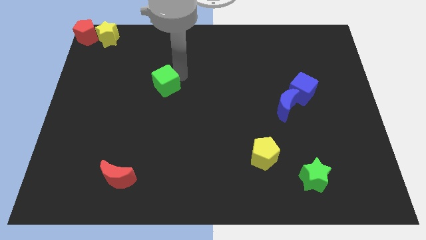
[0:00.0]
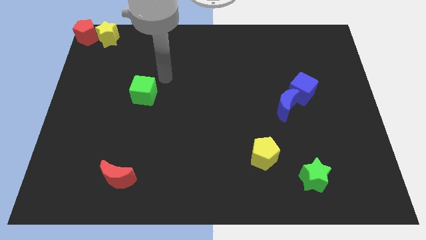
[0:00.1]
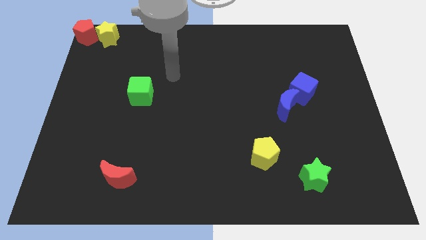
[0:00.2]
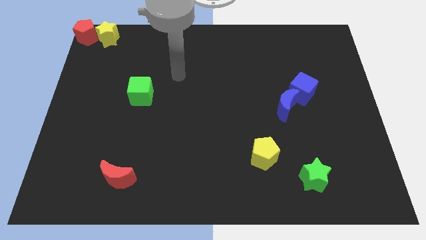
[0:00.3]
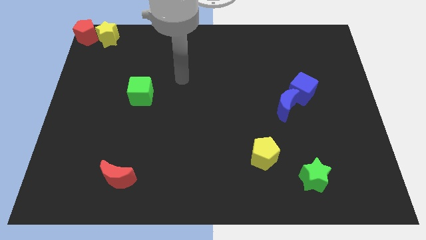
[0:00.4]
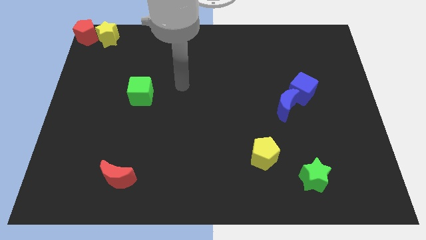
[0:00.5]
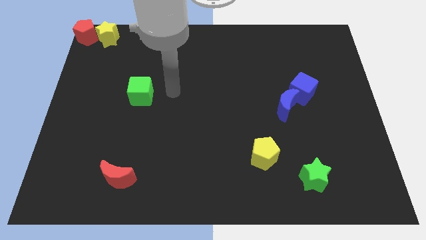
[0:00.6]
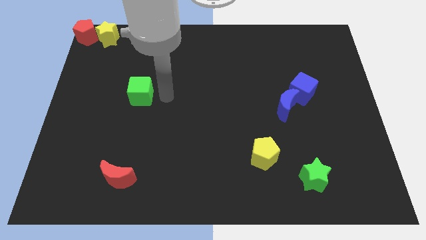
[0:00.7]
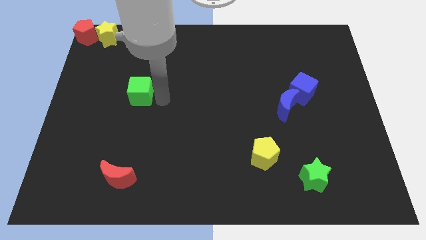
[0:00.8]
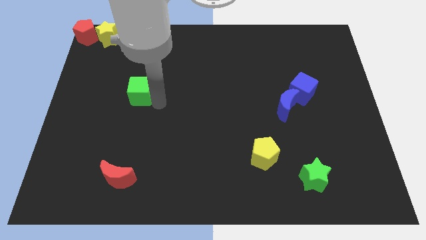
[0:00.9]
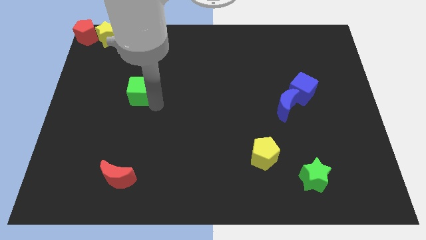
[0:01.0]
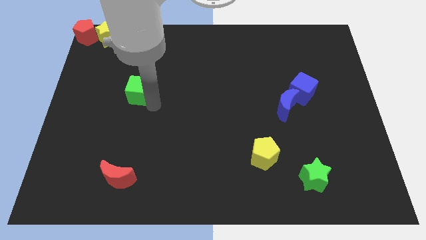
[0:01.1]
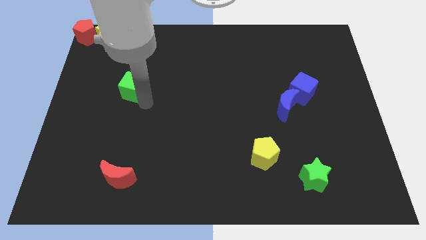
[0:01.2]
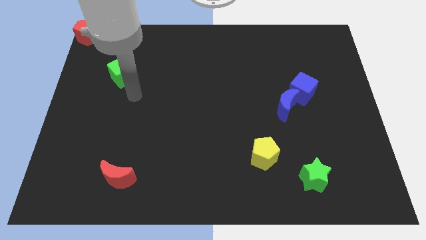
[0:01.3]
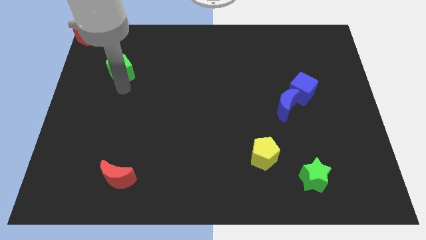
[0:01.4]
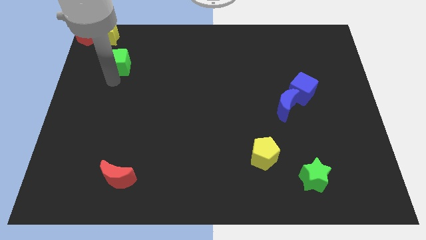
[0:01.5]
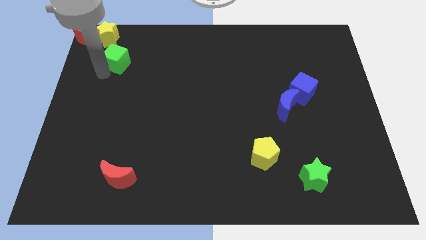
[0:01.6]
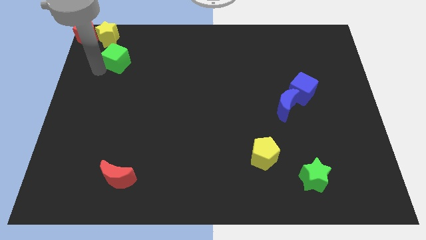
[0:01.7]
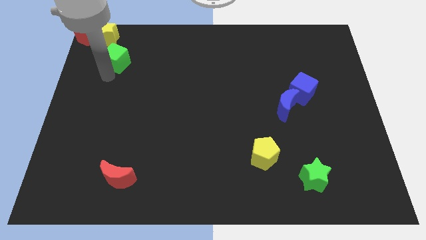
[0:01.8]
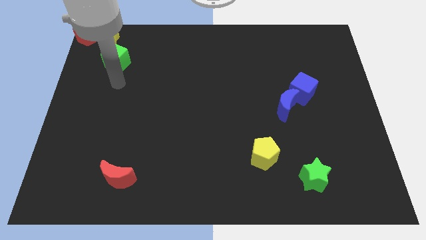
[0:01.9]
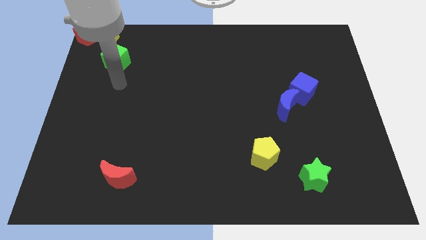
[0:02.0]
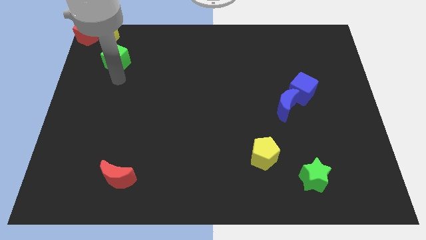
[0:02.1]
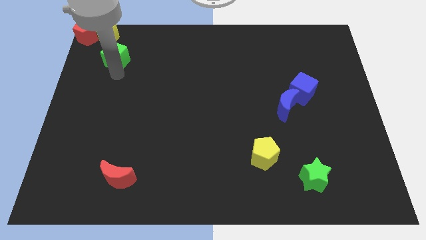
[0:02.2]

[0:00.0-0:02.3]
push the green cube towards the top left corner of the board

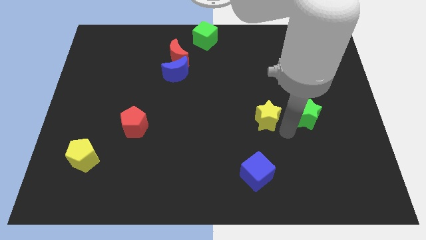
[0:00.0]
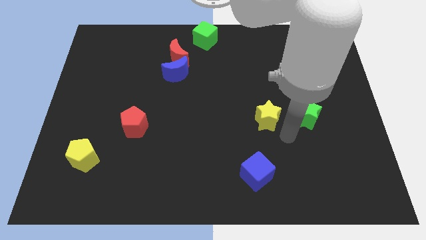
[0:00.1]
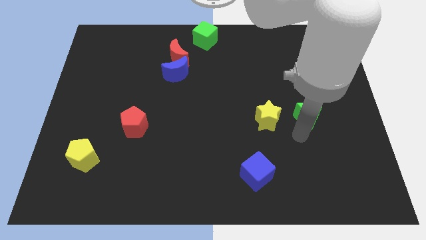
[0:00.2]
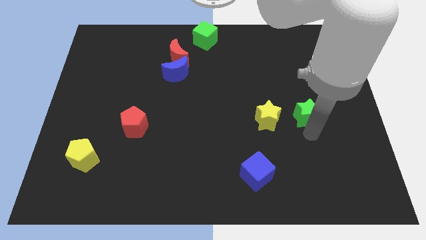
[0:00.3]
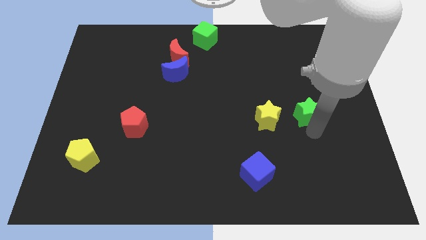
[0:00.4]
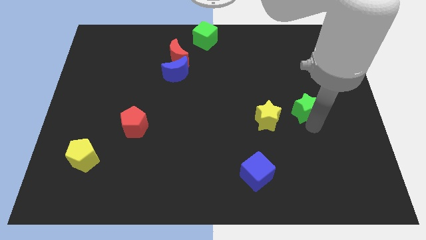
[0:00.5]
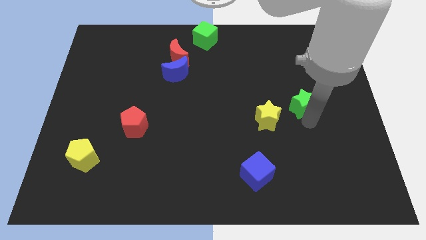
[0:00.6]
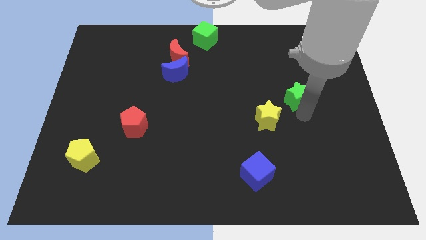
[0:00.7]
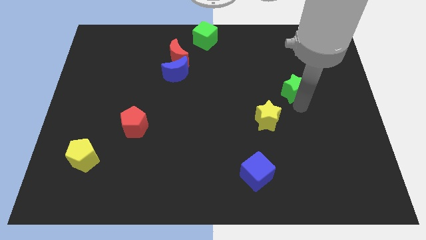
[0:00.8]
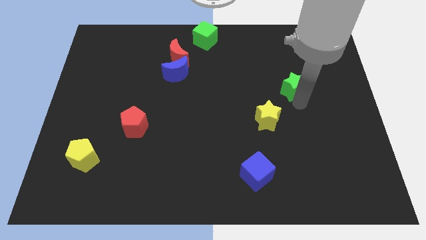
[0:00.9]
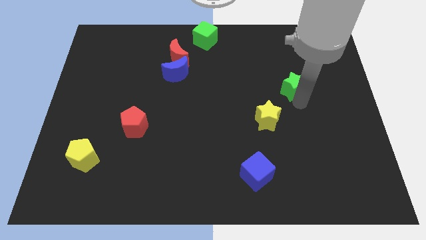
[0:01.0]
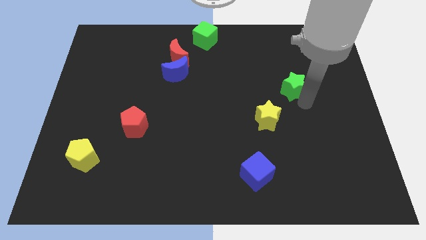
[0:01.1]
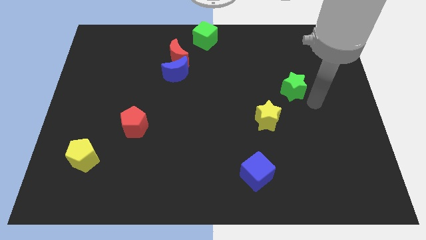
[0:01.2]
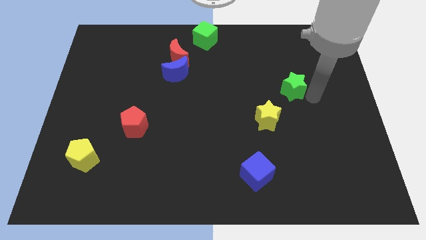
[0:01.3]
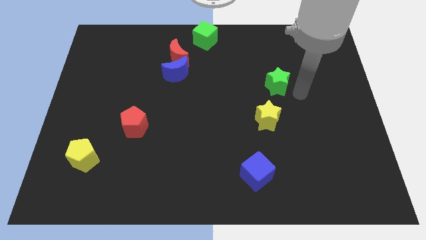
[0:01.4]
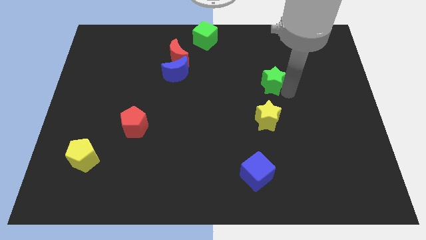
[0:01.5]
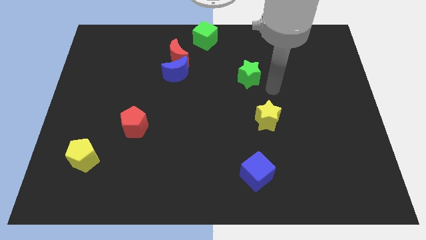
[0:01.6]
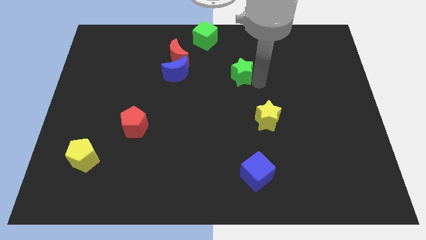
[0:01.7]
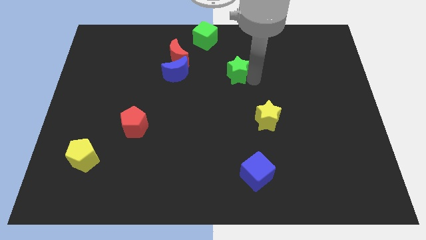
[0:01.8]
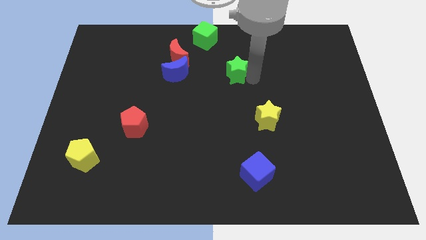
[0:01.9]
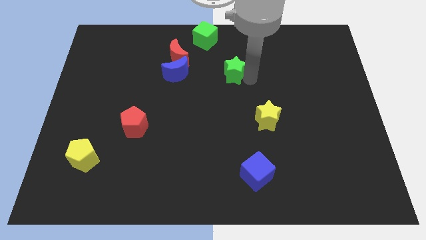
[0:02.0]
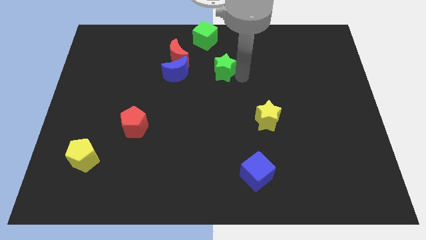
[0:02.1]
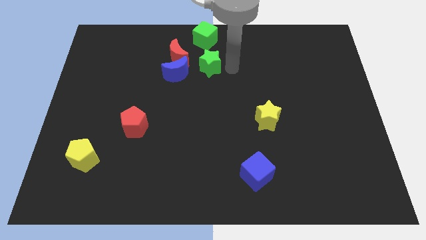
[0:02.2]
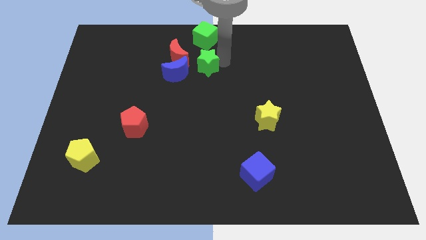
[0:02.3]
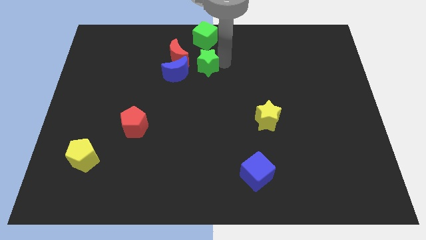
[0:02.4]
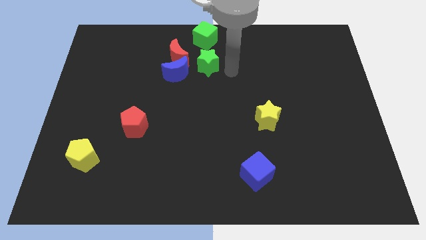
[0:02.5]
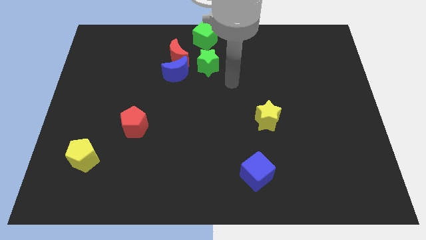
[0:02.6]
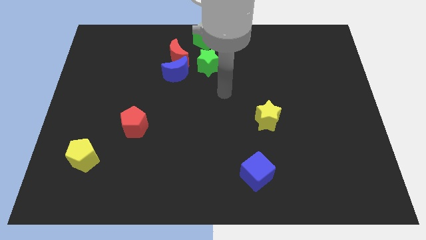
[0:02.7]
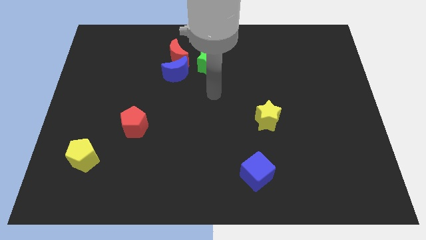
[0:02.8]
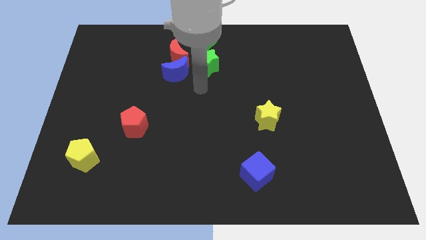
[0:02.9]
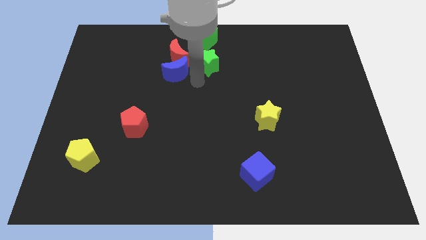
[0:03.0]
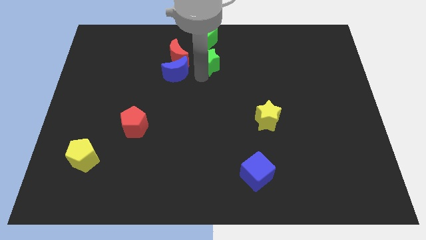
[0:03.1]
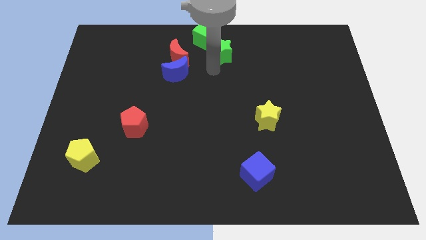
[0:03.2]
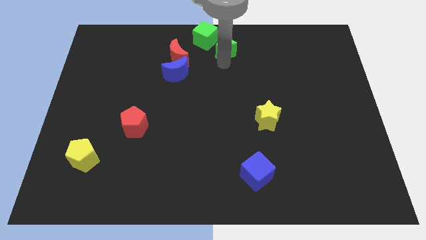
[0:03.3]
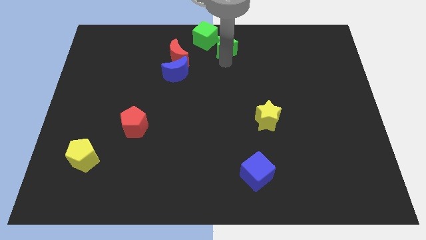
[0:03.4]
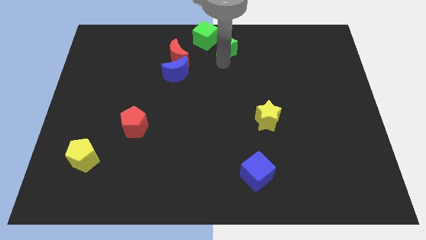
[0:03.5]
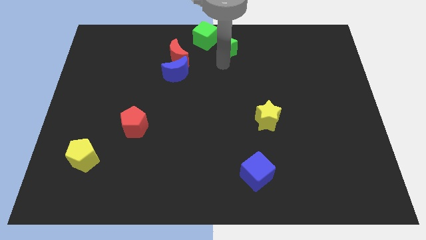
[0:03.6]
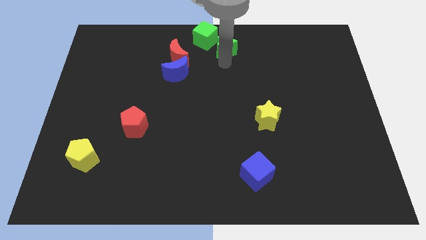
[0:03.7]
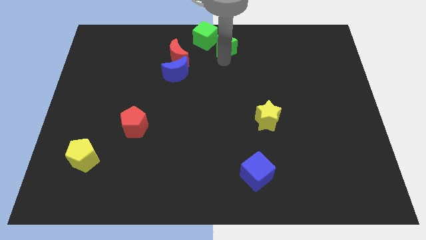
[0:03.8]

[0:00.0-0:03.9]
push the green star close to the green cube

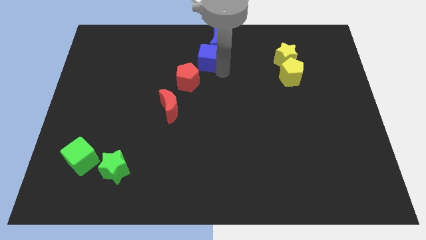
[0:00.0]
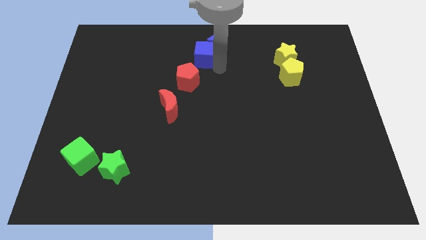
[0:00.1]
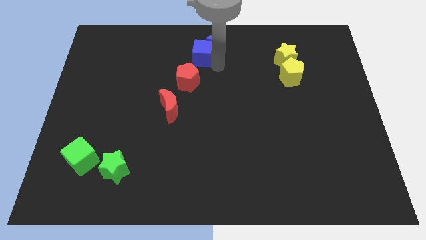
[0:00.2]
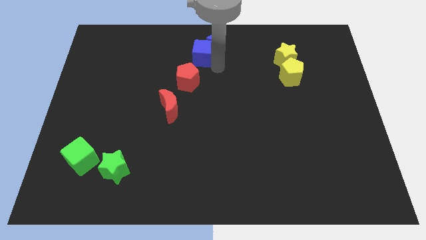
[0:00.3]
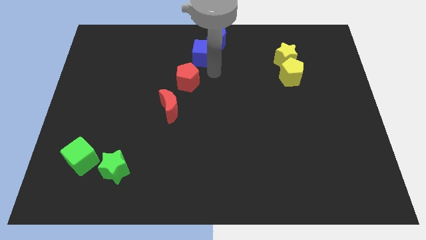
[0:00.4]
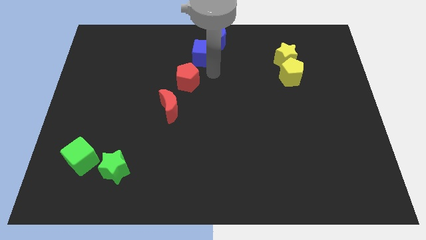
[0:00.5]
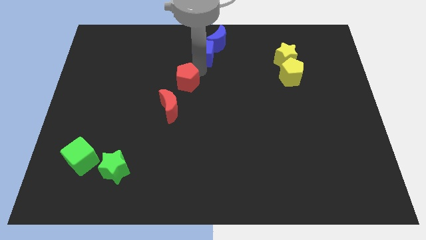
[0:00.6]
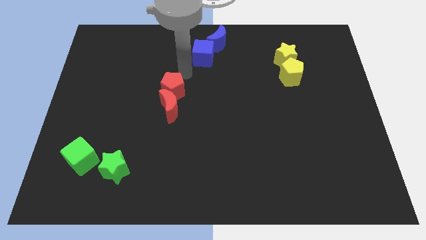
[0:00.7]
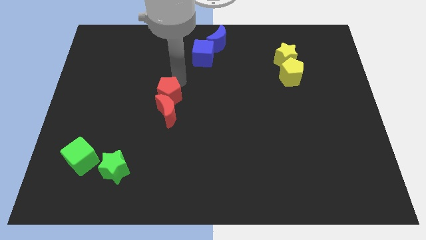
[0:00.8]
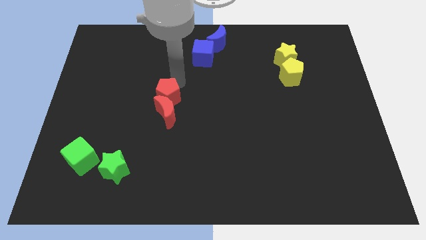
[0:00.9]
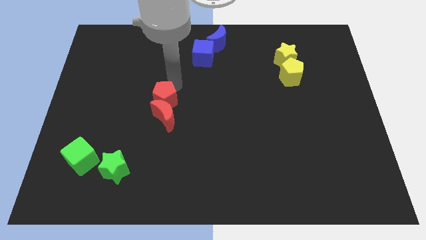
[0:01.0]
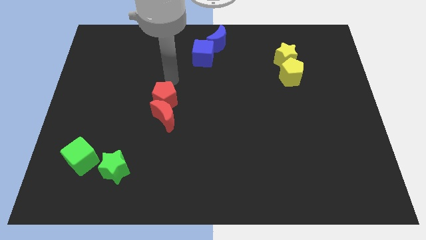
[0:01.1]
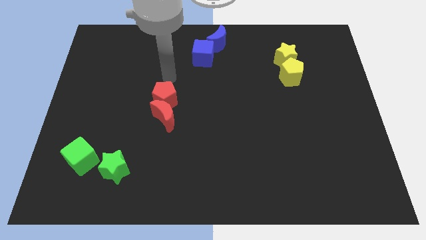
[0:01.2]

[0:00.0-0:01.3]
push the red pentagon into the red crescent

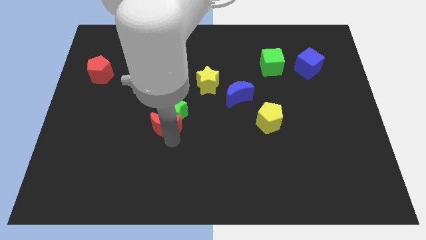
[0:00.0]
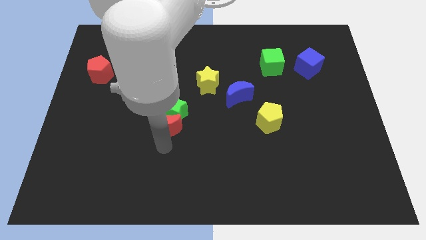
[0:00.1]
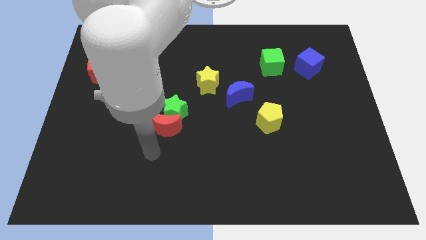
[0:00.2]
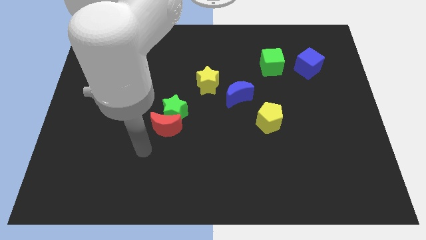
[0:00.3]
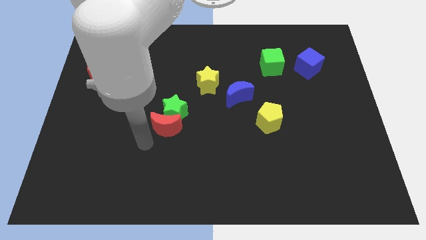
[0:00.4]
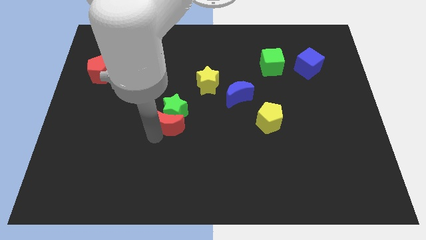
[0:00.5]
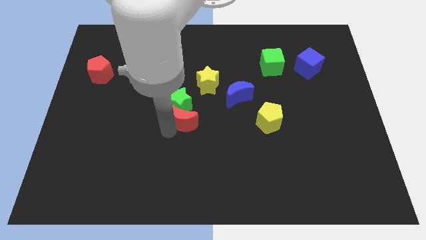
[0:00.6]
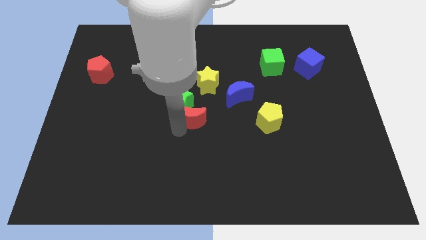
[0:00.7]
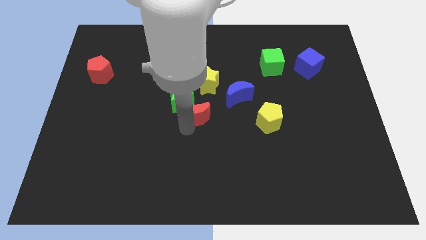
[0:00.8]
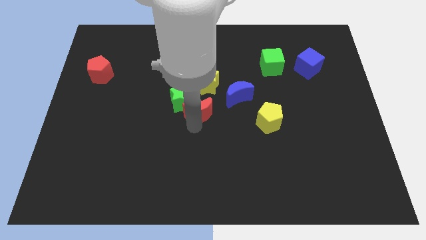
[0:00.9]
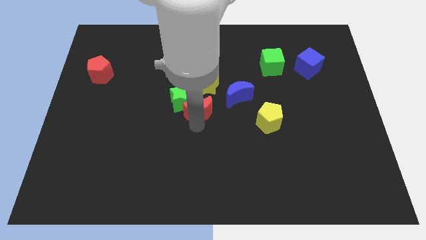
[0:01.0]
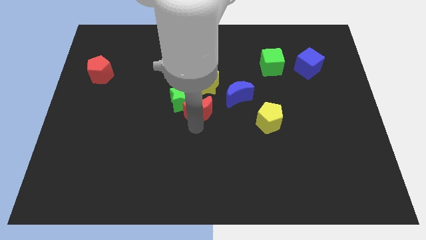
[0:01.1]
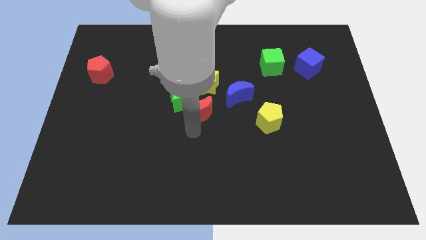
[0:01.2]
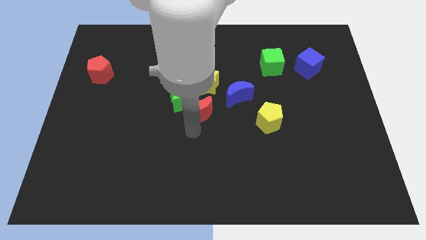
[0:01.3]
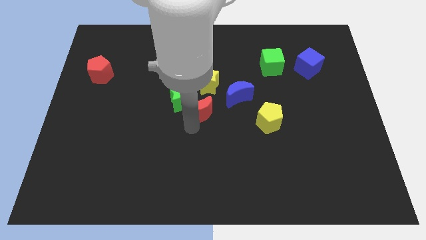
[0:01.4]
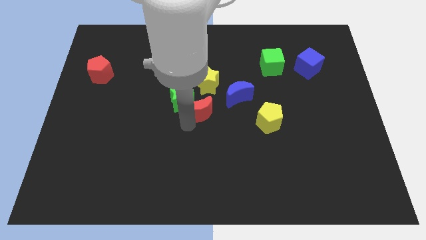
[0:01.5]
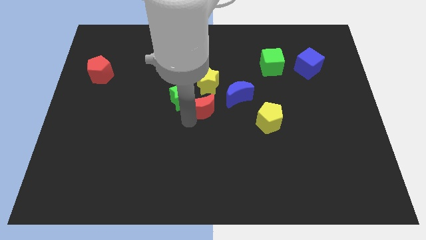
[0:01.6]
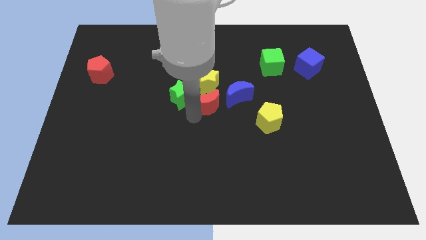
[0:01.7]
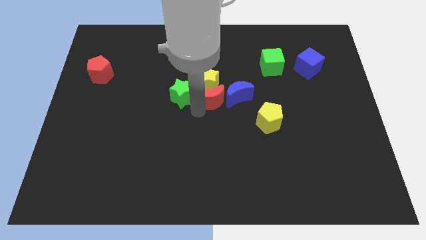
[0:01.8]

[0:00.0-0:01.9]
place the red crescent below the yellow star
